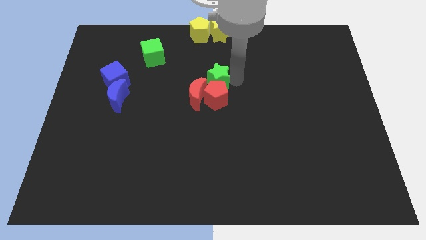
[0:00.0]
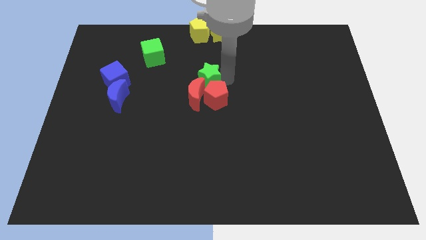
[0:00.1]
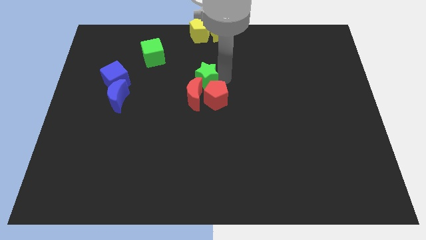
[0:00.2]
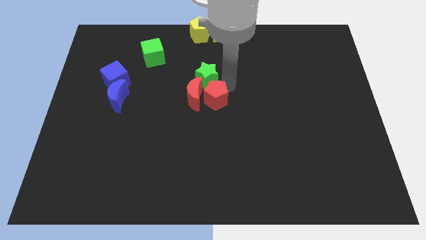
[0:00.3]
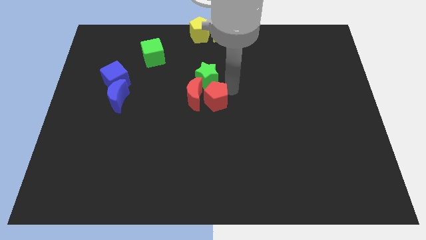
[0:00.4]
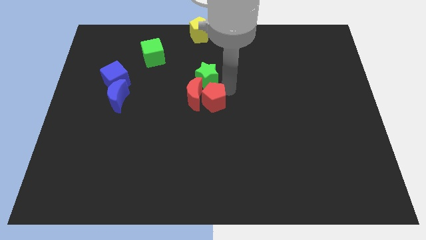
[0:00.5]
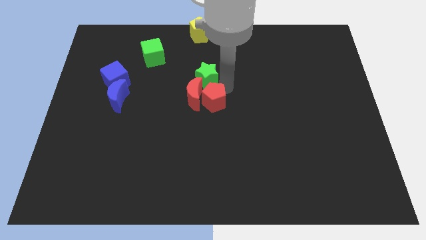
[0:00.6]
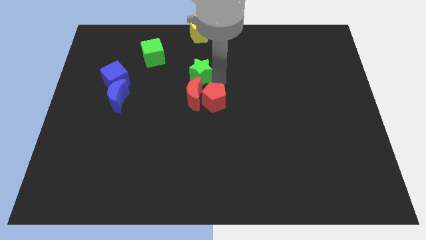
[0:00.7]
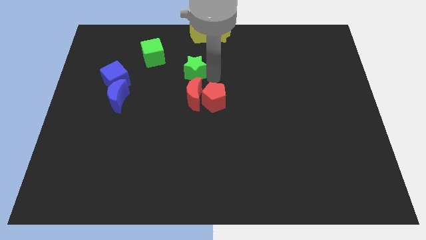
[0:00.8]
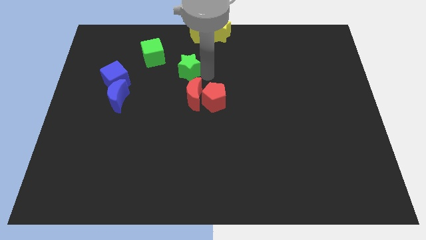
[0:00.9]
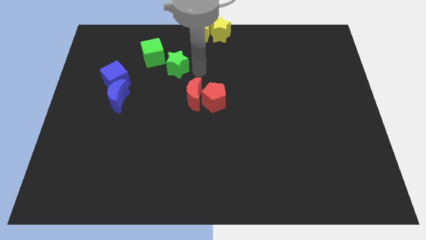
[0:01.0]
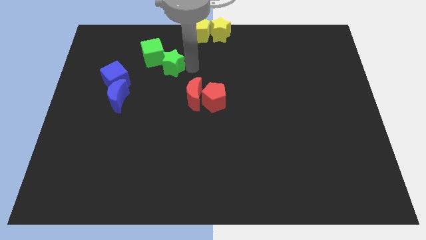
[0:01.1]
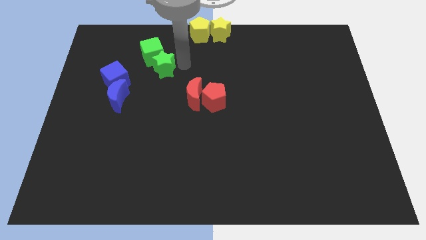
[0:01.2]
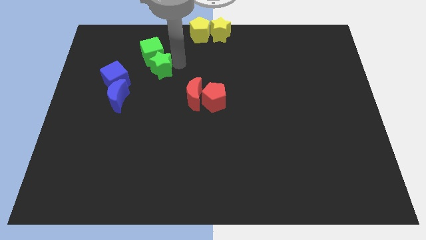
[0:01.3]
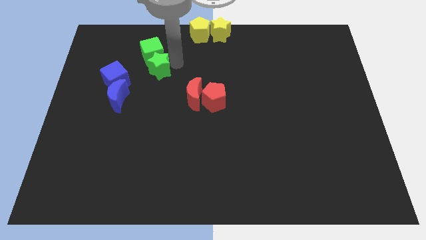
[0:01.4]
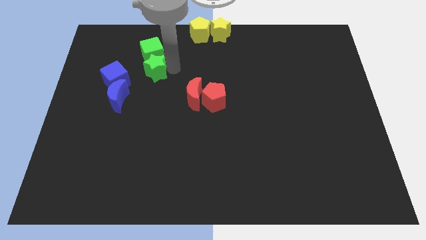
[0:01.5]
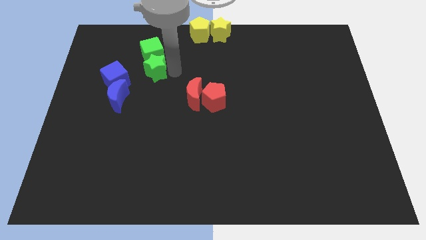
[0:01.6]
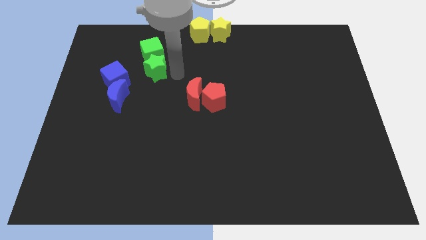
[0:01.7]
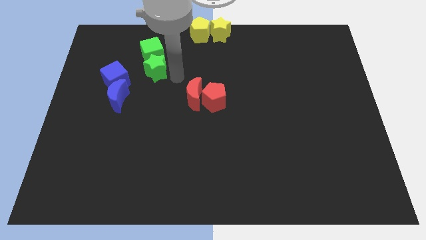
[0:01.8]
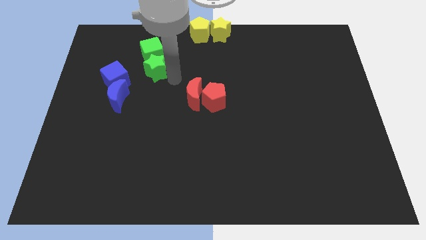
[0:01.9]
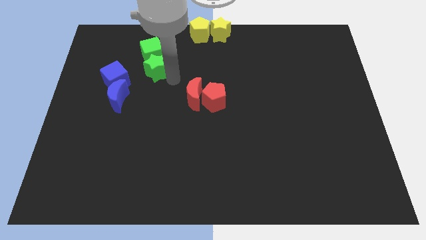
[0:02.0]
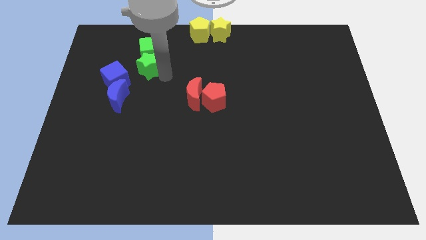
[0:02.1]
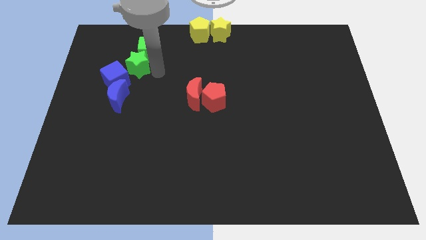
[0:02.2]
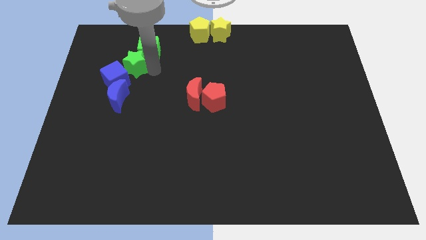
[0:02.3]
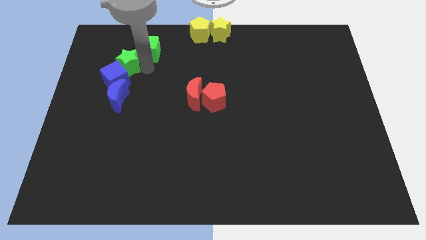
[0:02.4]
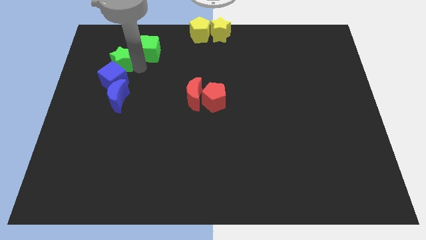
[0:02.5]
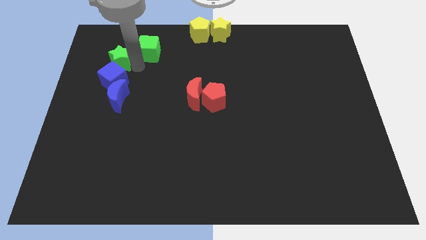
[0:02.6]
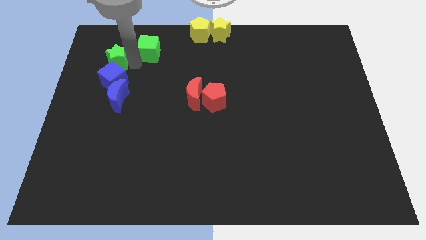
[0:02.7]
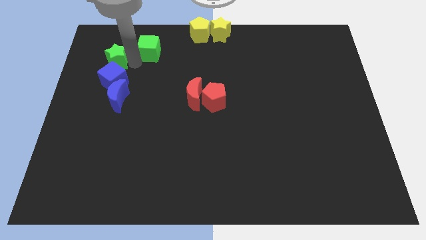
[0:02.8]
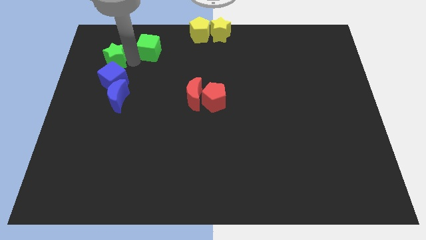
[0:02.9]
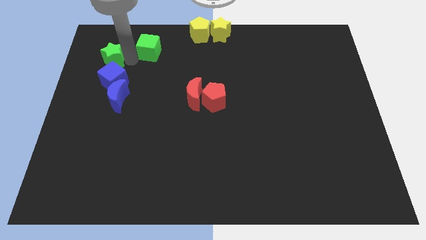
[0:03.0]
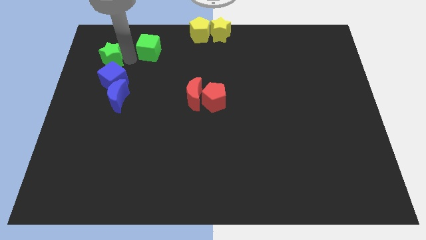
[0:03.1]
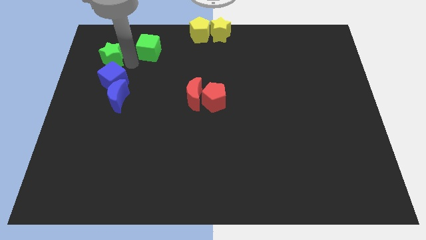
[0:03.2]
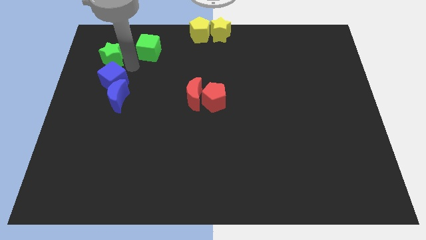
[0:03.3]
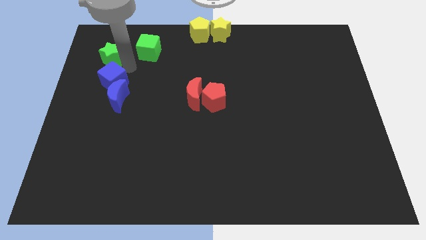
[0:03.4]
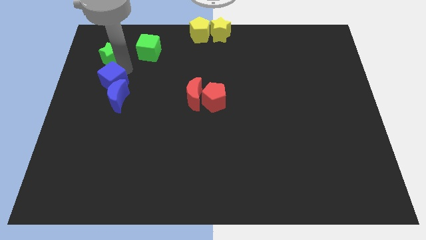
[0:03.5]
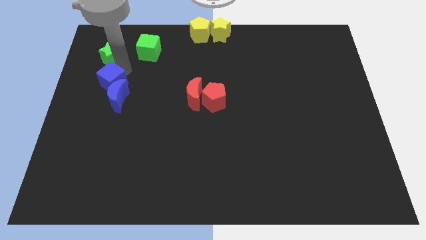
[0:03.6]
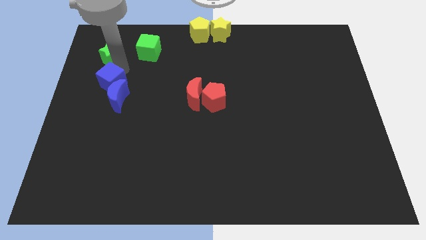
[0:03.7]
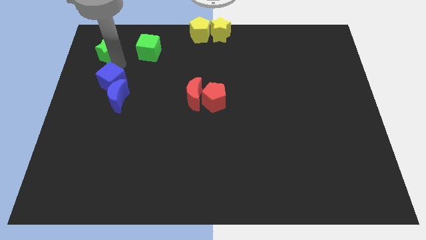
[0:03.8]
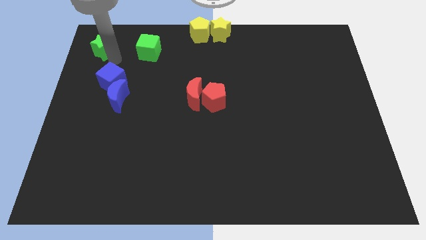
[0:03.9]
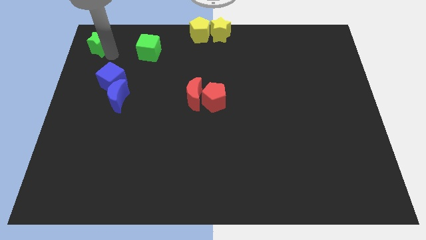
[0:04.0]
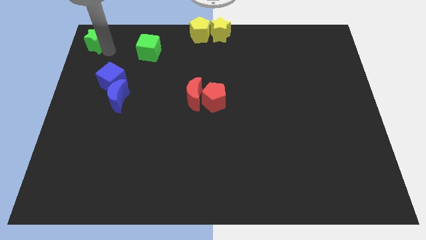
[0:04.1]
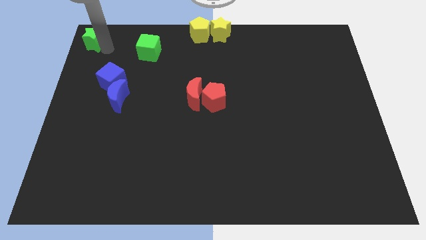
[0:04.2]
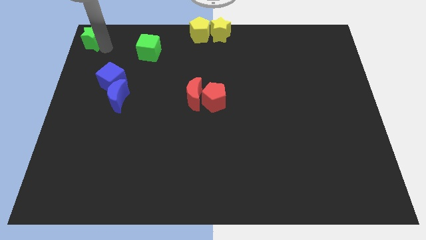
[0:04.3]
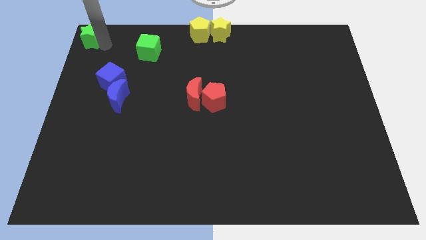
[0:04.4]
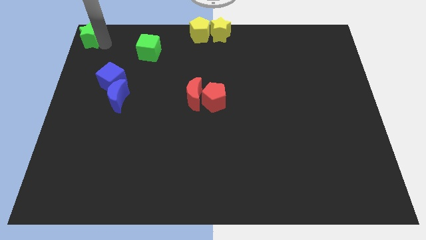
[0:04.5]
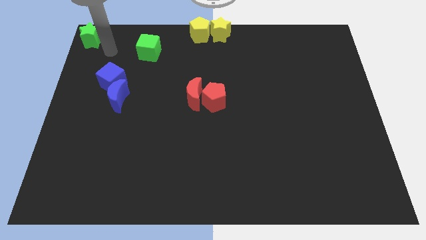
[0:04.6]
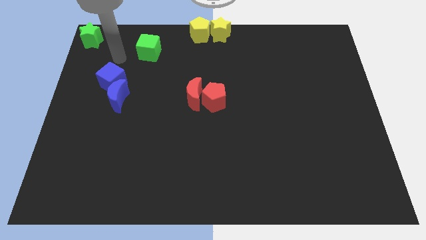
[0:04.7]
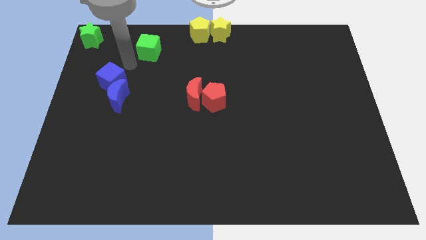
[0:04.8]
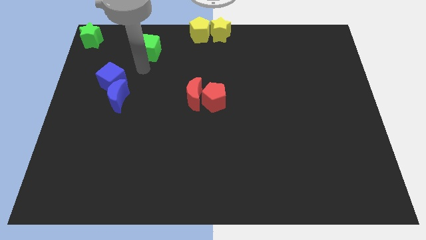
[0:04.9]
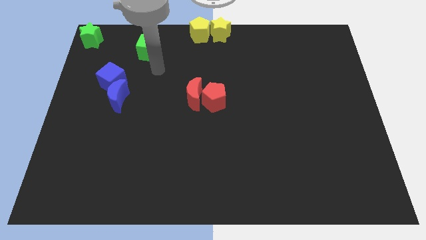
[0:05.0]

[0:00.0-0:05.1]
push green star towards the top left

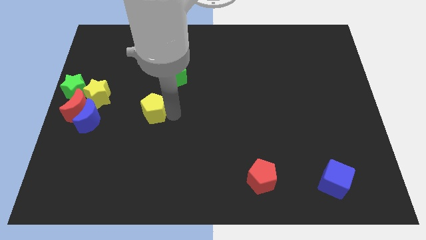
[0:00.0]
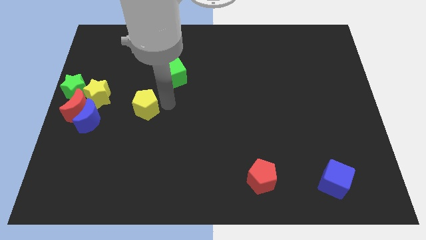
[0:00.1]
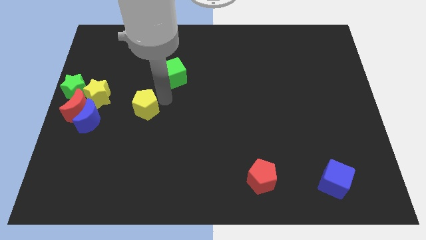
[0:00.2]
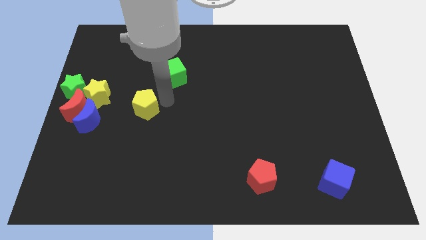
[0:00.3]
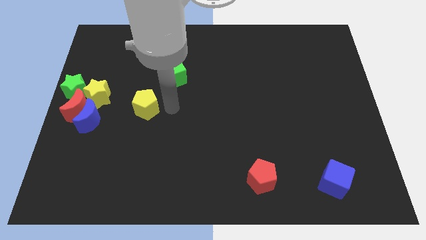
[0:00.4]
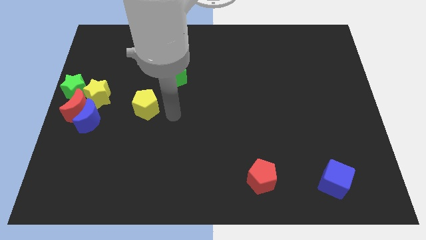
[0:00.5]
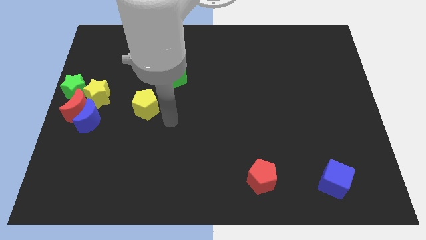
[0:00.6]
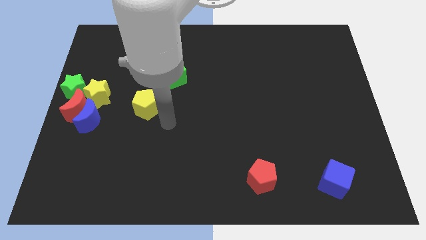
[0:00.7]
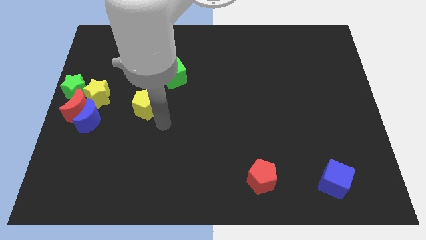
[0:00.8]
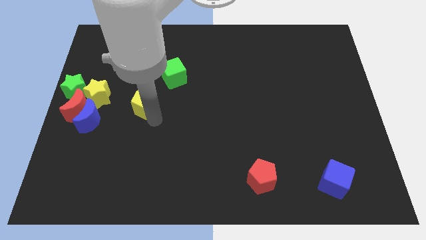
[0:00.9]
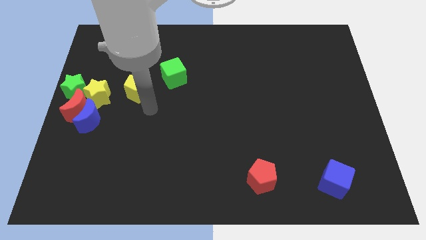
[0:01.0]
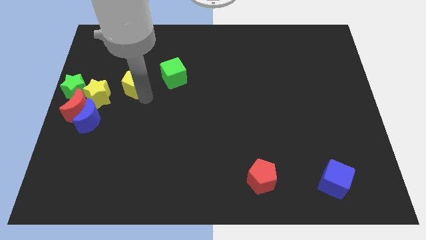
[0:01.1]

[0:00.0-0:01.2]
place the yellow pentagon in between the yellow star and green cube

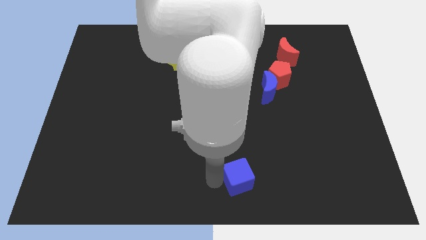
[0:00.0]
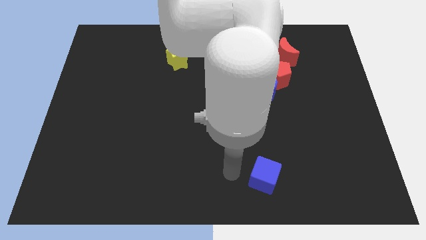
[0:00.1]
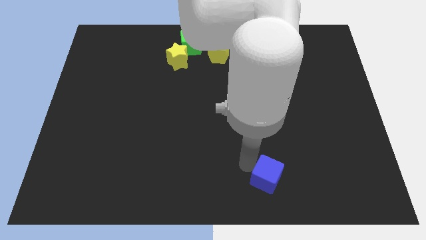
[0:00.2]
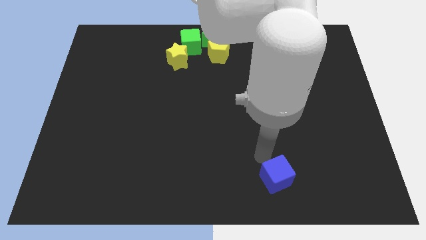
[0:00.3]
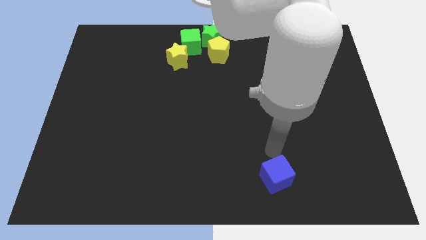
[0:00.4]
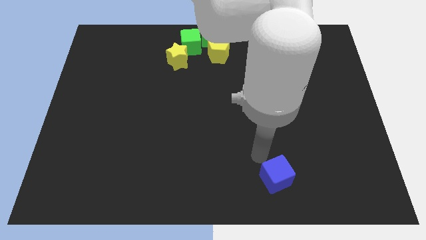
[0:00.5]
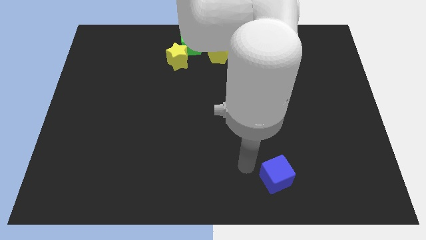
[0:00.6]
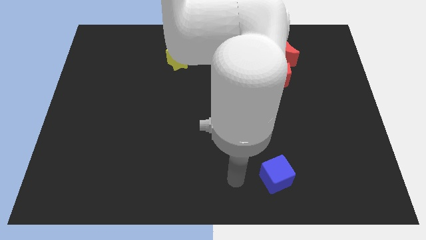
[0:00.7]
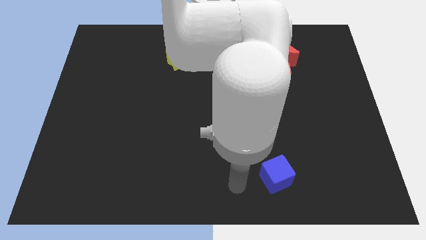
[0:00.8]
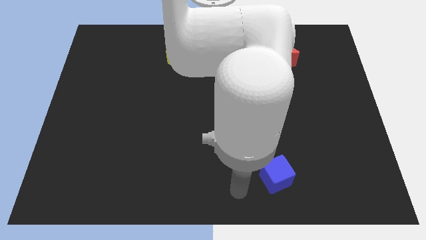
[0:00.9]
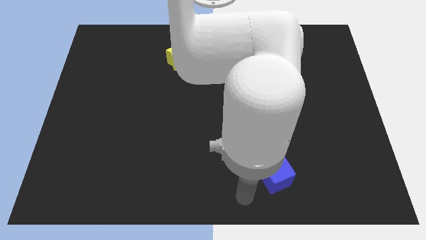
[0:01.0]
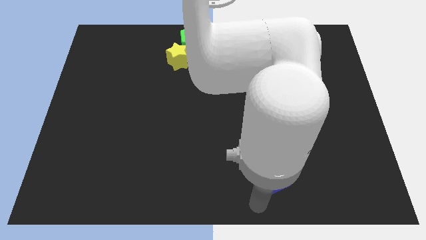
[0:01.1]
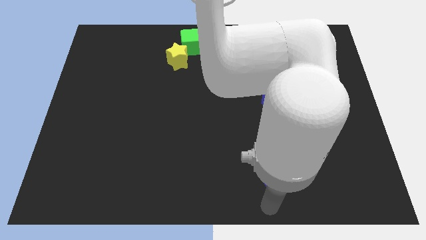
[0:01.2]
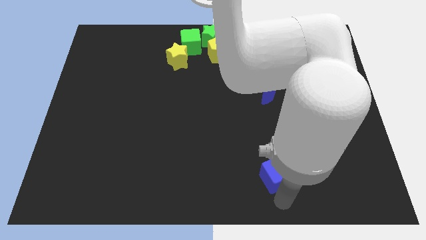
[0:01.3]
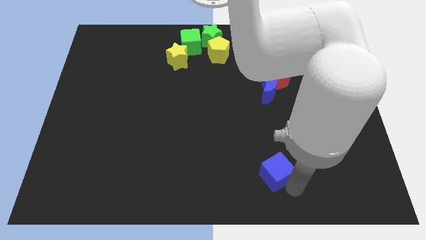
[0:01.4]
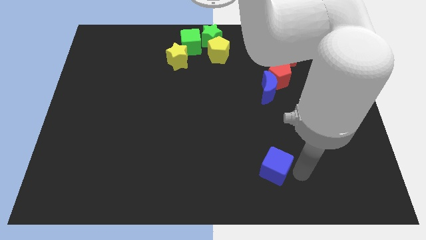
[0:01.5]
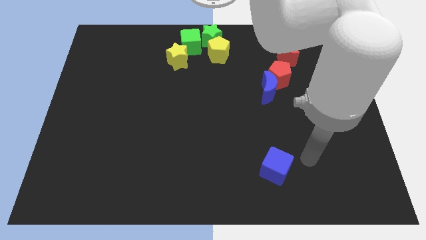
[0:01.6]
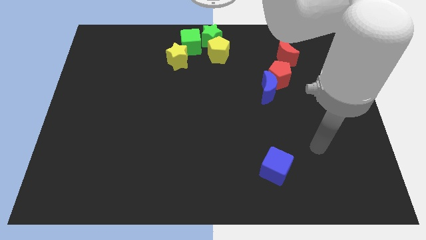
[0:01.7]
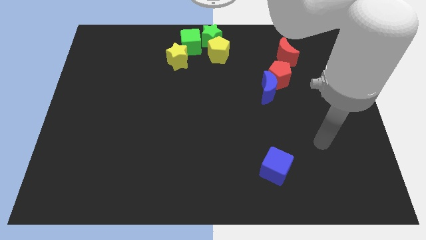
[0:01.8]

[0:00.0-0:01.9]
put the blue cube vertically below the blue moon

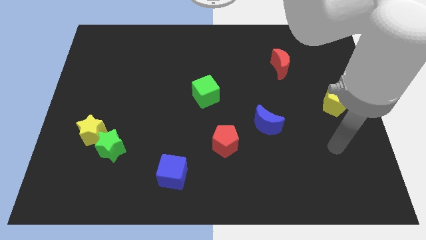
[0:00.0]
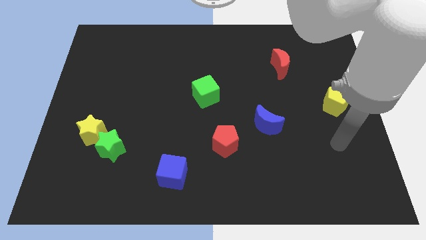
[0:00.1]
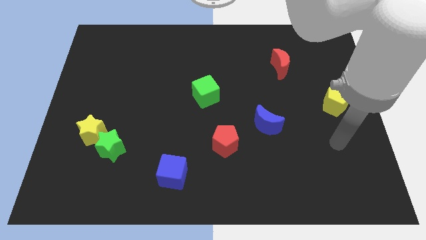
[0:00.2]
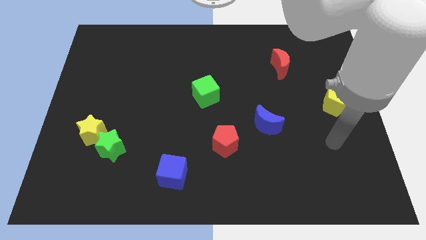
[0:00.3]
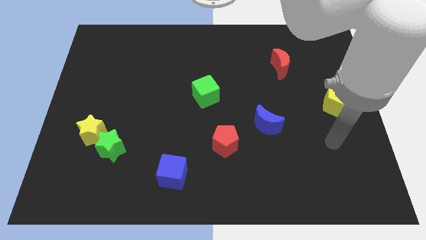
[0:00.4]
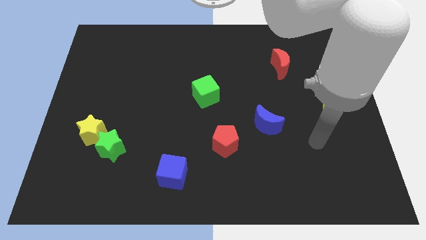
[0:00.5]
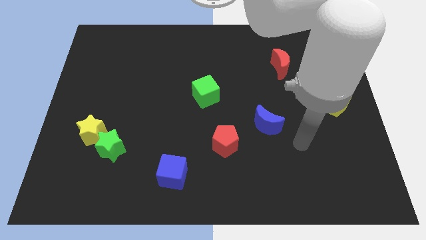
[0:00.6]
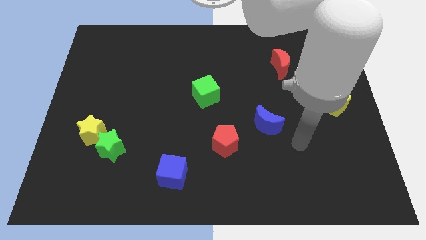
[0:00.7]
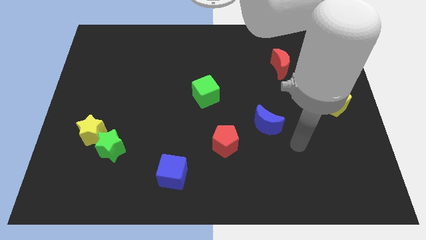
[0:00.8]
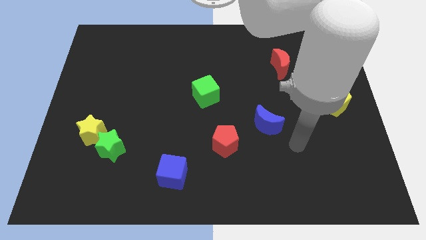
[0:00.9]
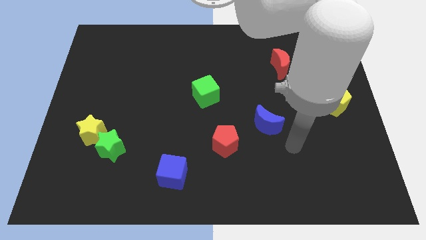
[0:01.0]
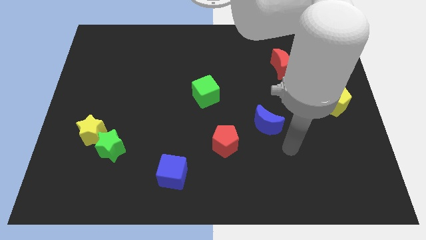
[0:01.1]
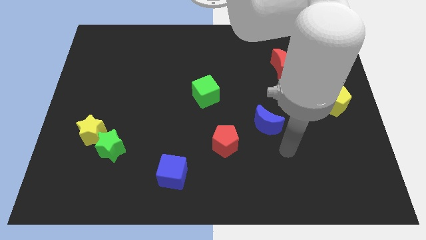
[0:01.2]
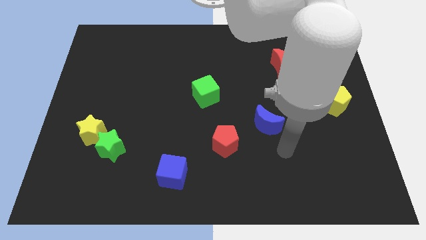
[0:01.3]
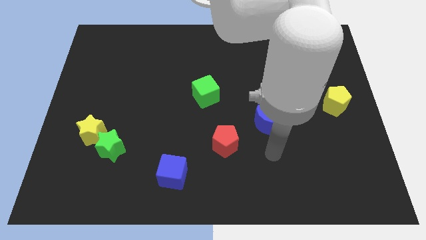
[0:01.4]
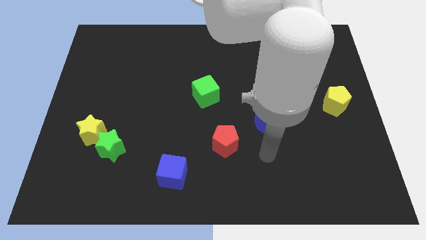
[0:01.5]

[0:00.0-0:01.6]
point your arm at the bottom of the blue crescent
